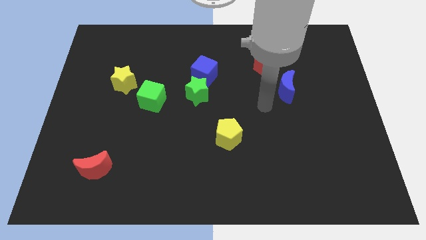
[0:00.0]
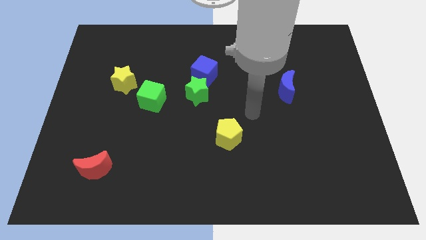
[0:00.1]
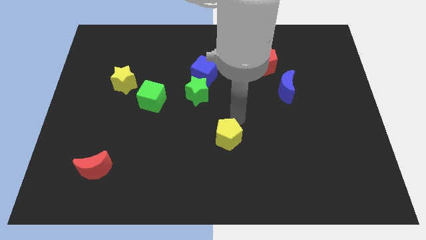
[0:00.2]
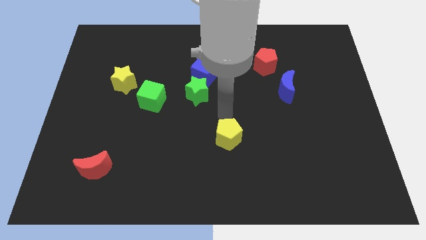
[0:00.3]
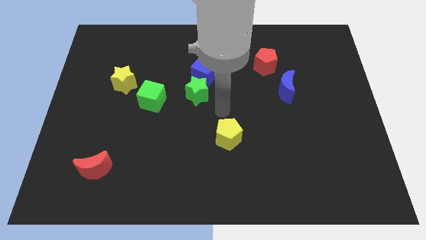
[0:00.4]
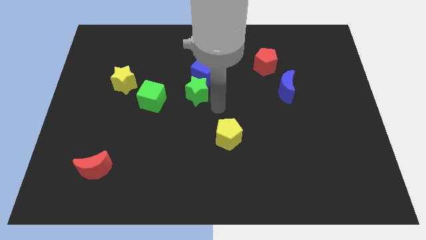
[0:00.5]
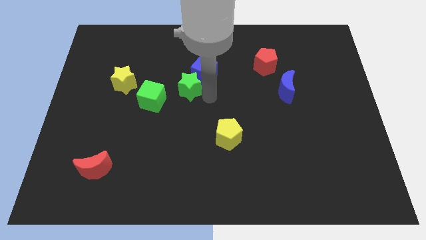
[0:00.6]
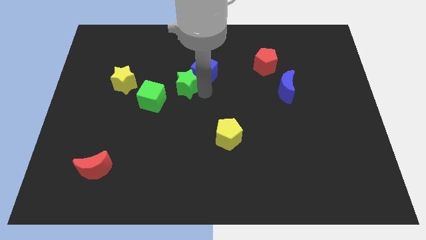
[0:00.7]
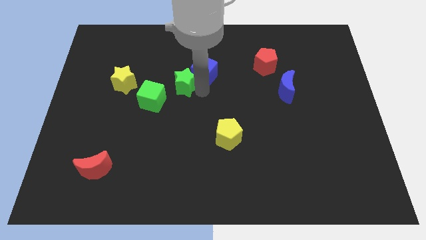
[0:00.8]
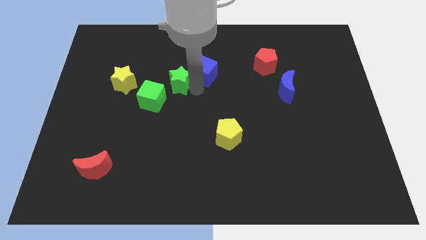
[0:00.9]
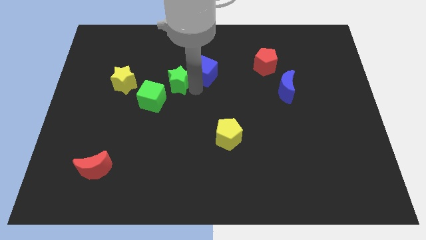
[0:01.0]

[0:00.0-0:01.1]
place the green star in between the green cube and blue cube

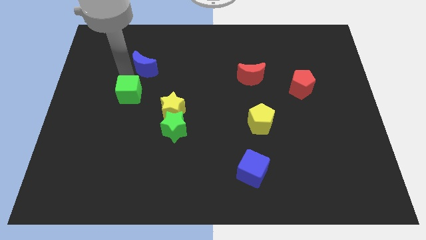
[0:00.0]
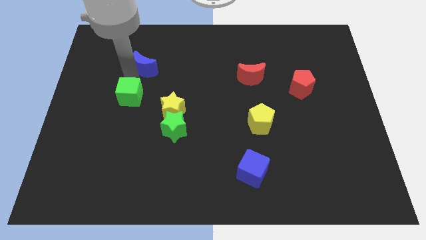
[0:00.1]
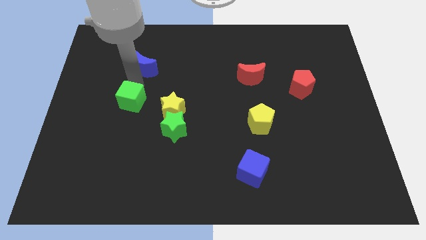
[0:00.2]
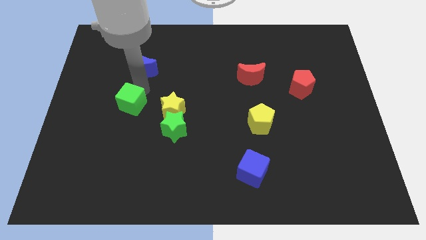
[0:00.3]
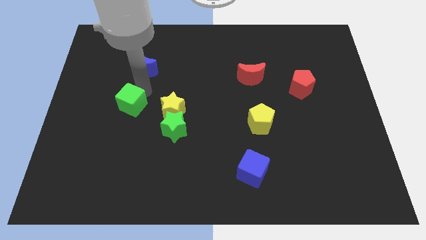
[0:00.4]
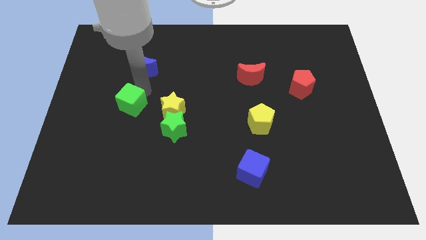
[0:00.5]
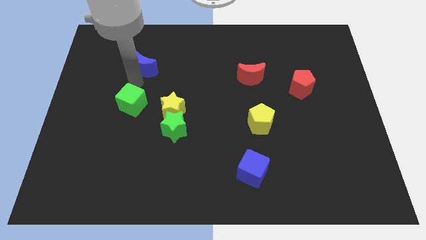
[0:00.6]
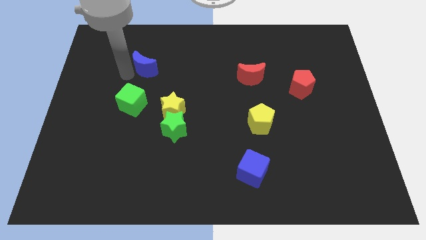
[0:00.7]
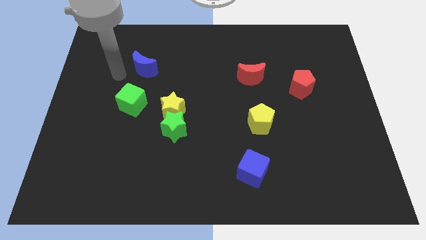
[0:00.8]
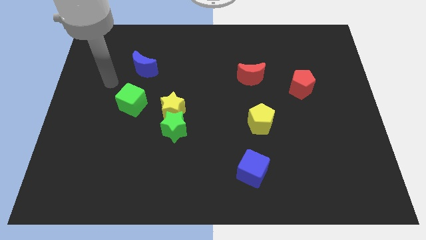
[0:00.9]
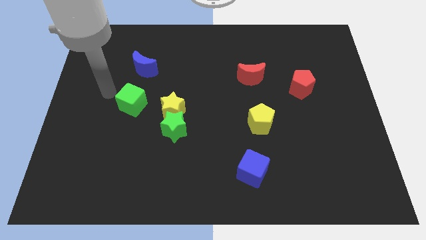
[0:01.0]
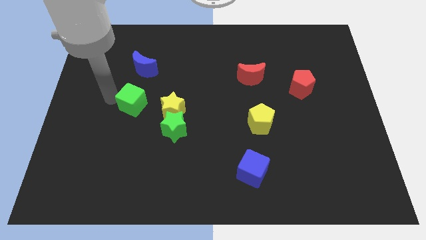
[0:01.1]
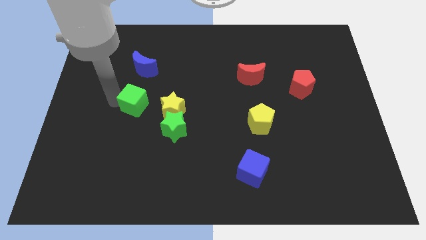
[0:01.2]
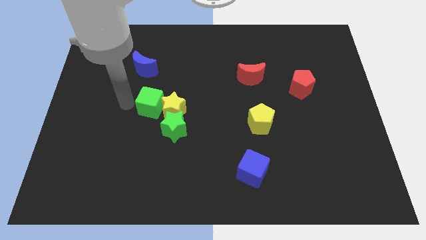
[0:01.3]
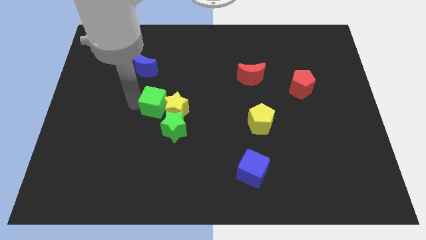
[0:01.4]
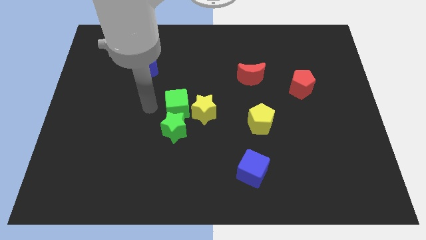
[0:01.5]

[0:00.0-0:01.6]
move the green cube into the yellow star

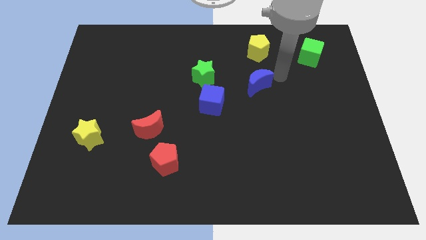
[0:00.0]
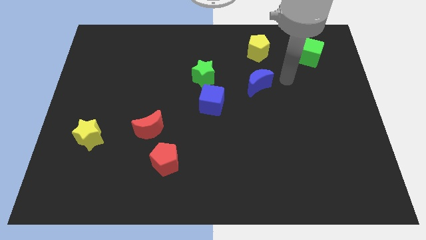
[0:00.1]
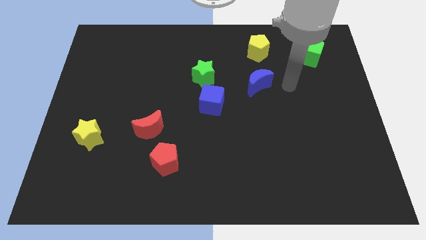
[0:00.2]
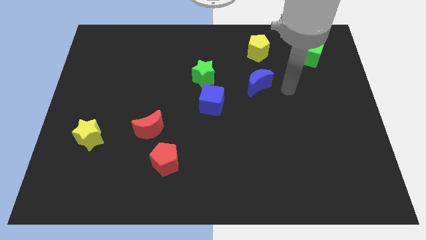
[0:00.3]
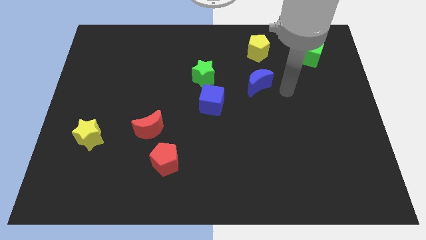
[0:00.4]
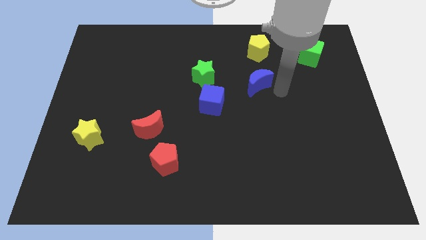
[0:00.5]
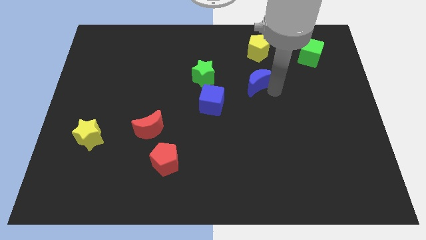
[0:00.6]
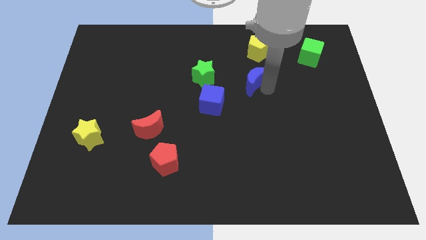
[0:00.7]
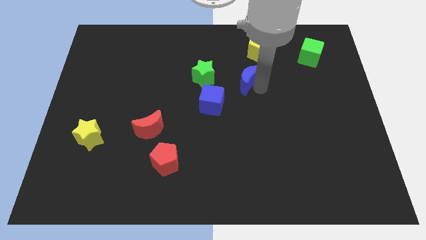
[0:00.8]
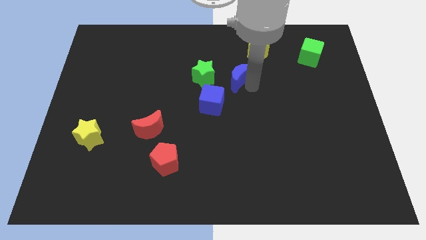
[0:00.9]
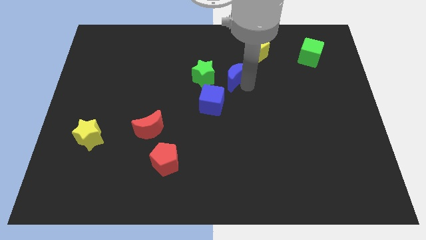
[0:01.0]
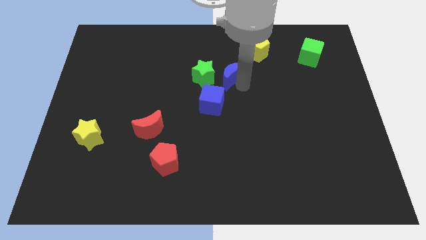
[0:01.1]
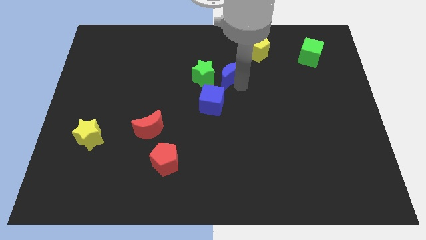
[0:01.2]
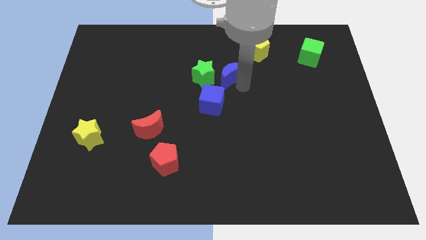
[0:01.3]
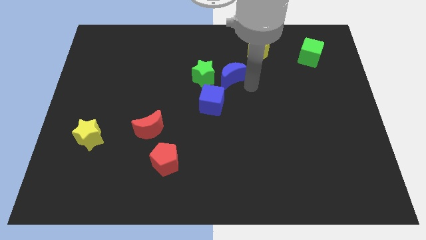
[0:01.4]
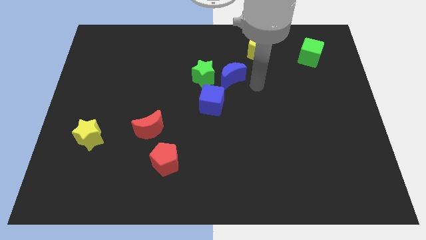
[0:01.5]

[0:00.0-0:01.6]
slide the blue moon near to the green star

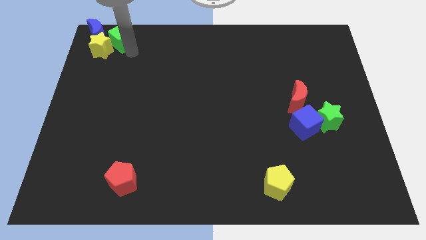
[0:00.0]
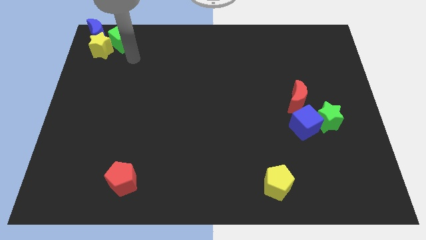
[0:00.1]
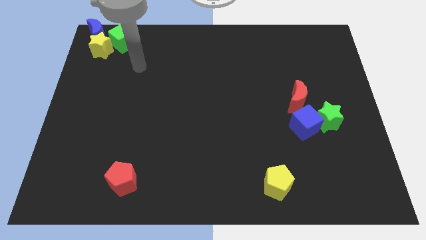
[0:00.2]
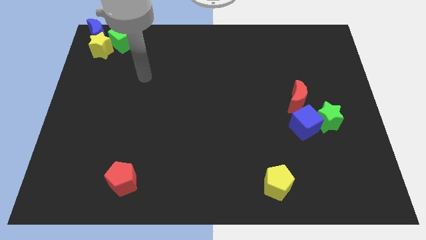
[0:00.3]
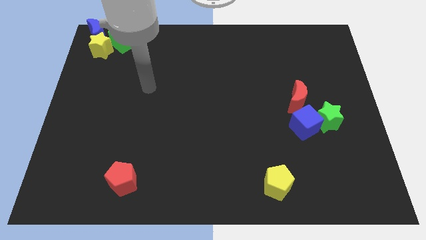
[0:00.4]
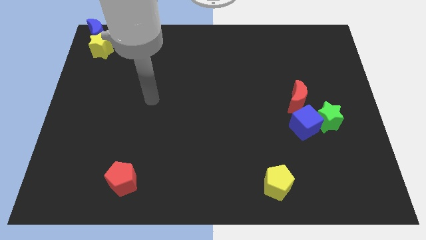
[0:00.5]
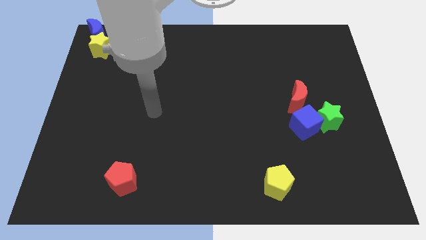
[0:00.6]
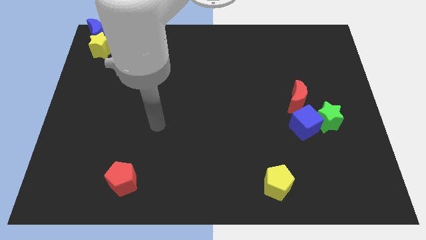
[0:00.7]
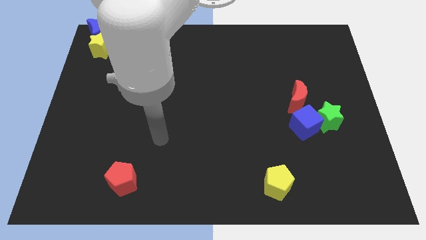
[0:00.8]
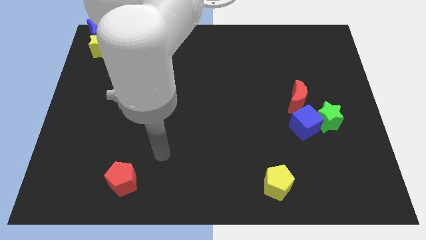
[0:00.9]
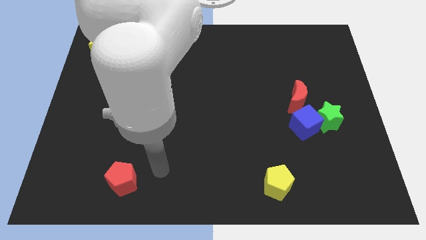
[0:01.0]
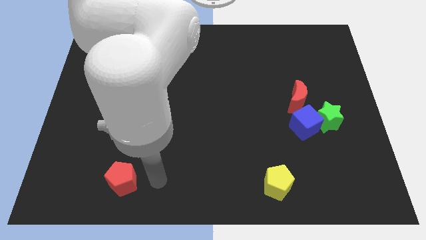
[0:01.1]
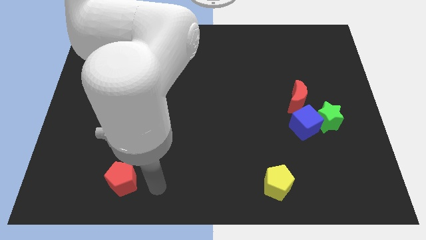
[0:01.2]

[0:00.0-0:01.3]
point the arm to the right side of red pentagon

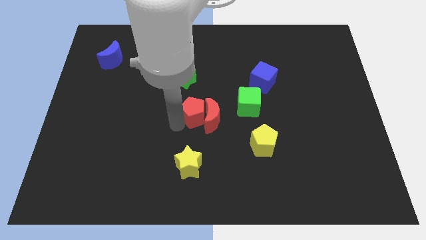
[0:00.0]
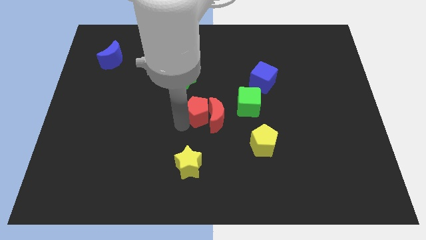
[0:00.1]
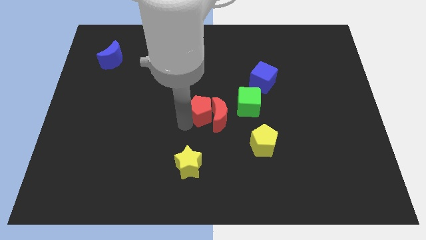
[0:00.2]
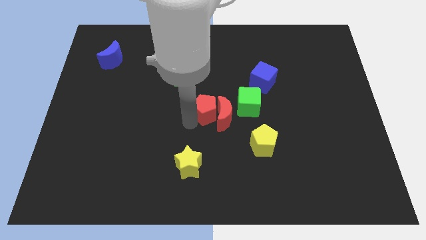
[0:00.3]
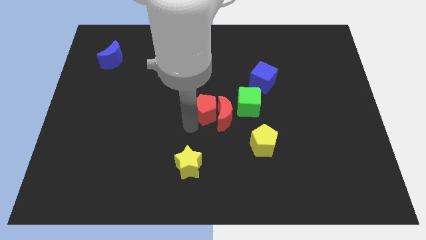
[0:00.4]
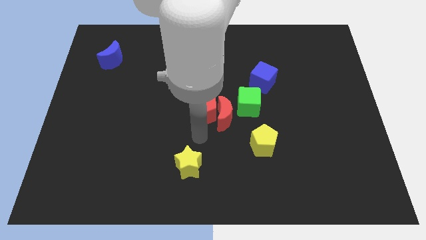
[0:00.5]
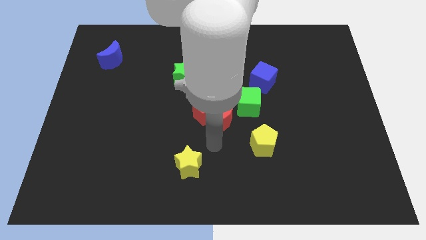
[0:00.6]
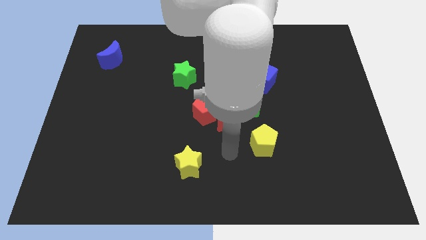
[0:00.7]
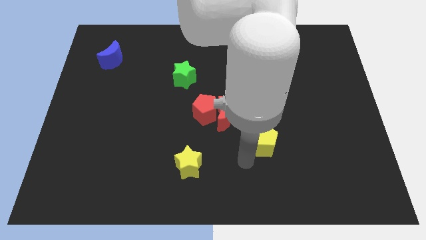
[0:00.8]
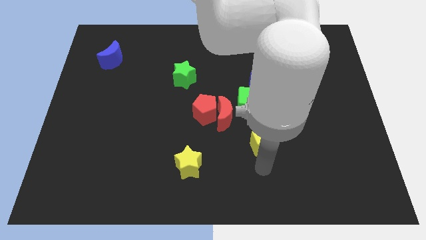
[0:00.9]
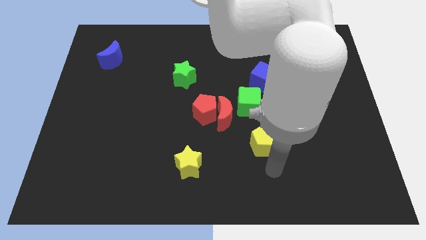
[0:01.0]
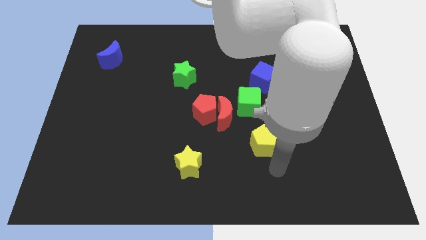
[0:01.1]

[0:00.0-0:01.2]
move your arm below the yellow pentagon

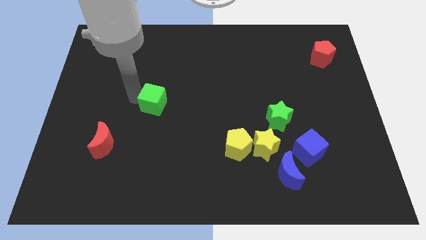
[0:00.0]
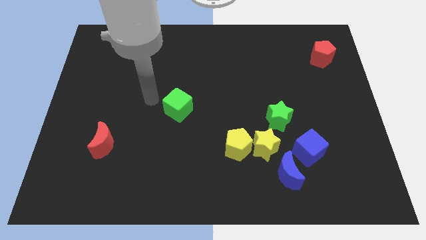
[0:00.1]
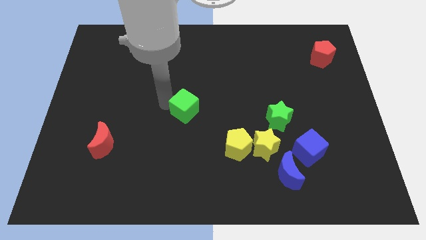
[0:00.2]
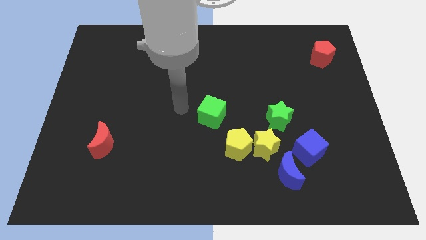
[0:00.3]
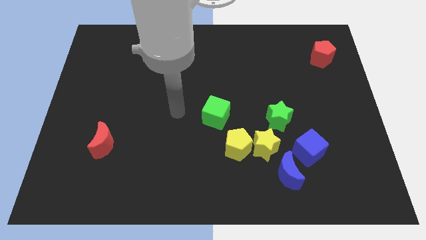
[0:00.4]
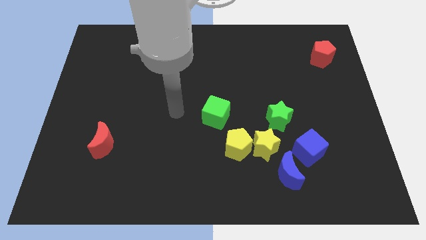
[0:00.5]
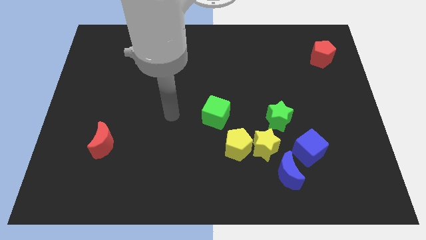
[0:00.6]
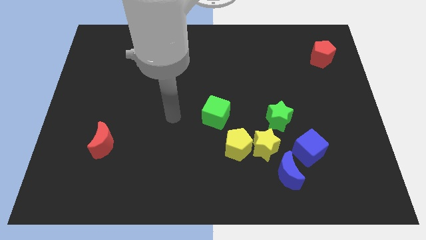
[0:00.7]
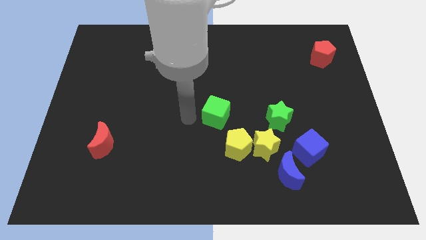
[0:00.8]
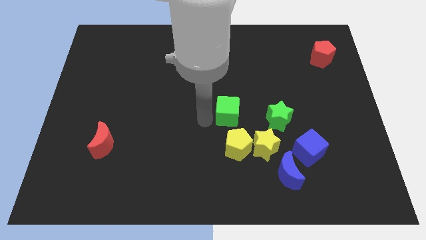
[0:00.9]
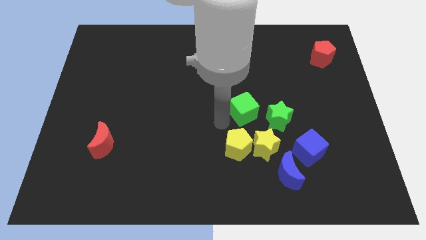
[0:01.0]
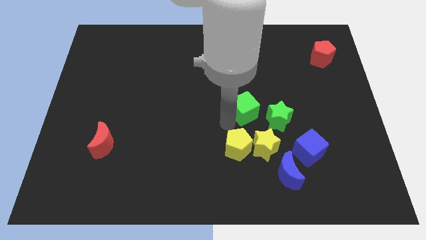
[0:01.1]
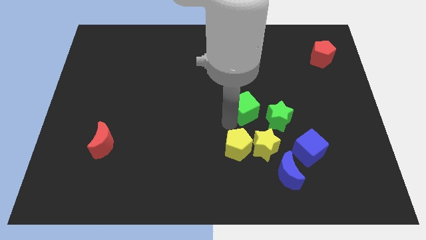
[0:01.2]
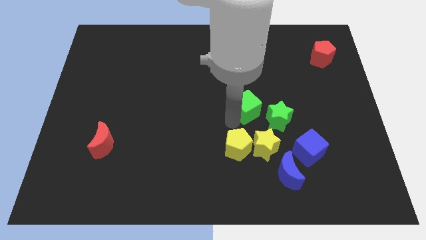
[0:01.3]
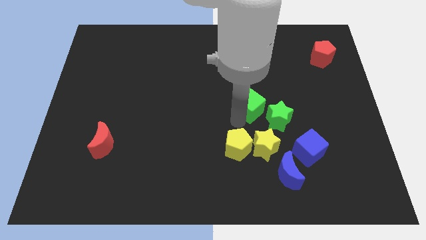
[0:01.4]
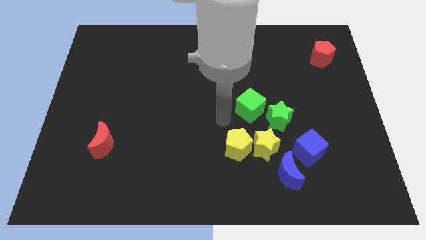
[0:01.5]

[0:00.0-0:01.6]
move the green cube to the group of blocks

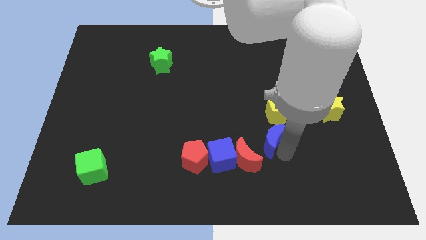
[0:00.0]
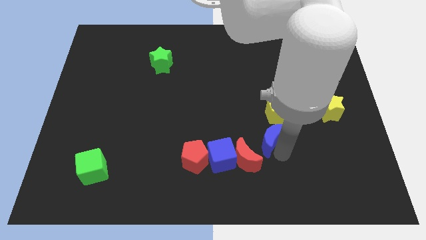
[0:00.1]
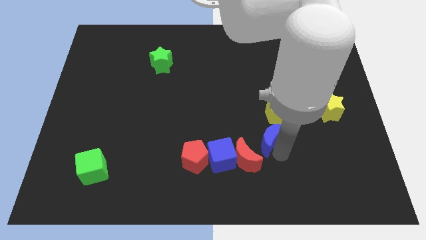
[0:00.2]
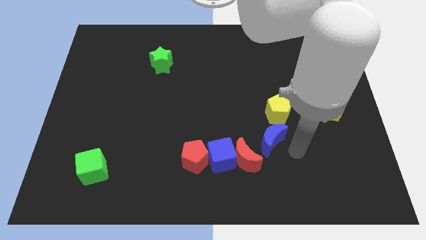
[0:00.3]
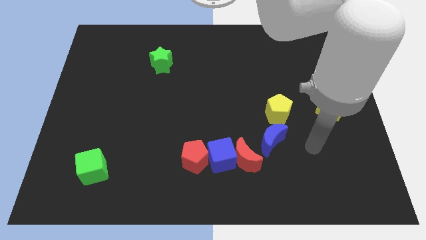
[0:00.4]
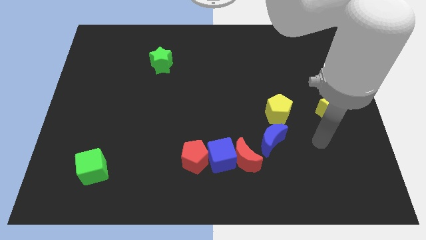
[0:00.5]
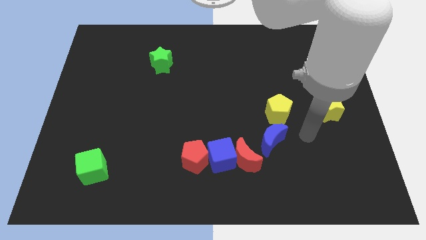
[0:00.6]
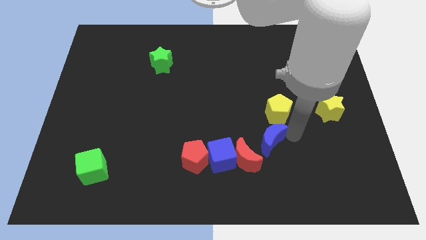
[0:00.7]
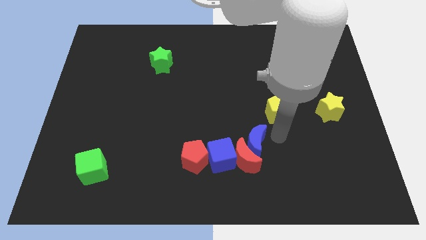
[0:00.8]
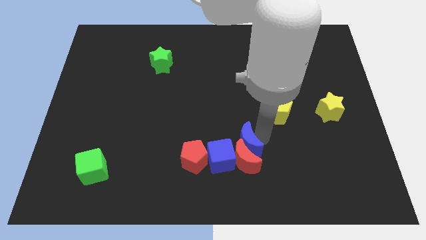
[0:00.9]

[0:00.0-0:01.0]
push blue moon into red moon
